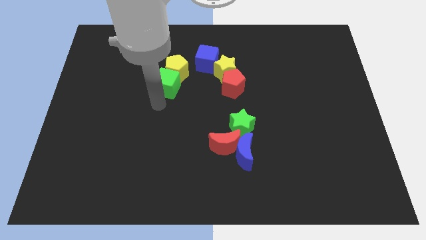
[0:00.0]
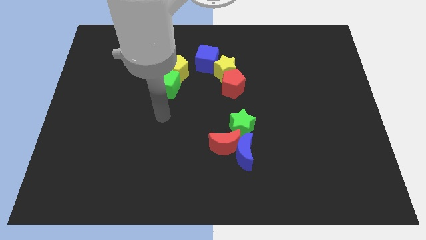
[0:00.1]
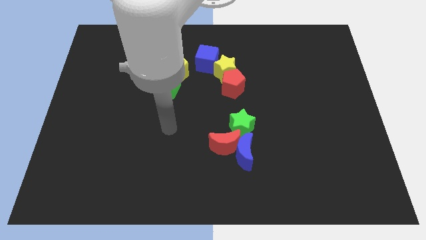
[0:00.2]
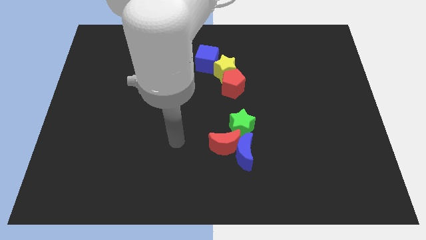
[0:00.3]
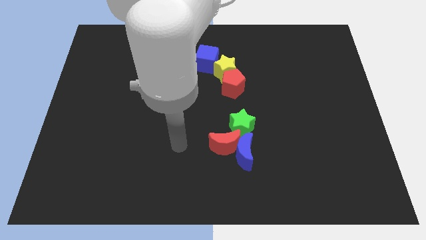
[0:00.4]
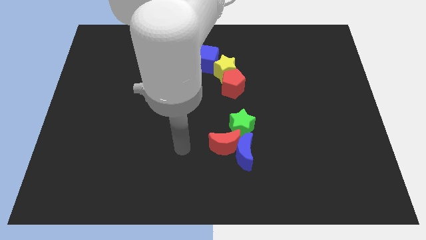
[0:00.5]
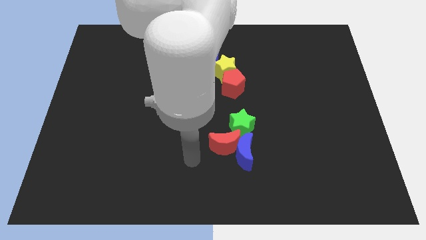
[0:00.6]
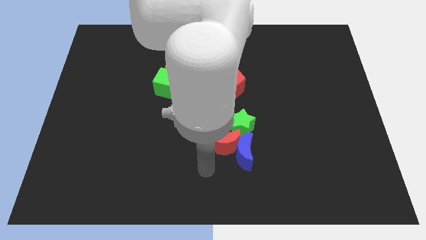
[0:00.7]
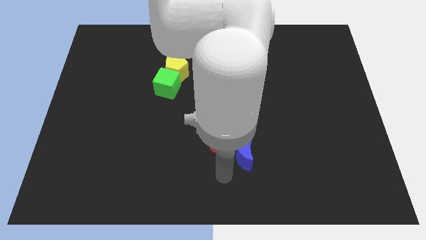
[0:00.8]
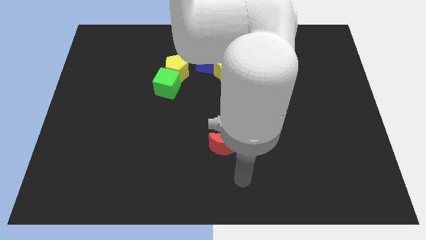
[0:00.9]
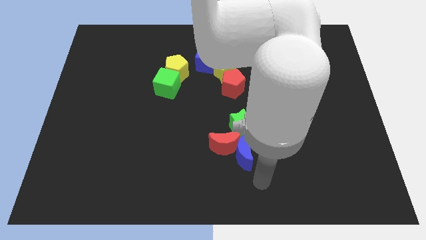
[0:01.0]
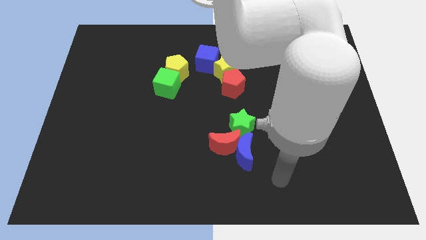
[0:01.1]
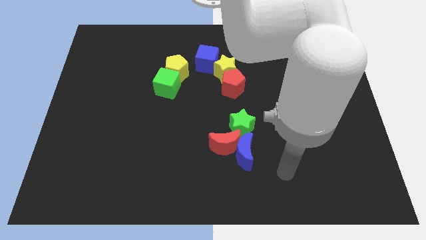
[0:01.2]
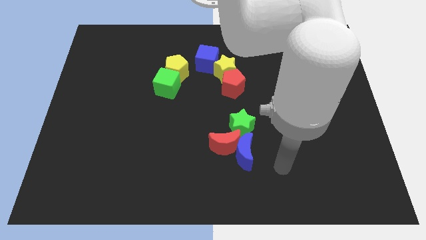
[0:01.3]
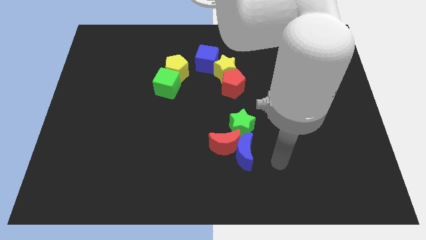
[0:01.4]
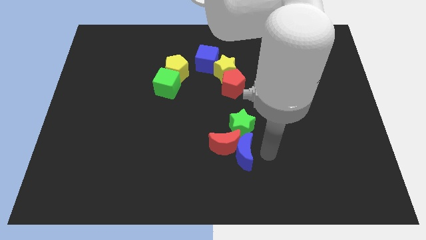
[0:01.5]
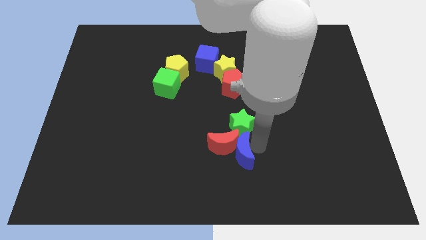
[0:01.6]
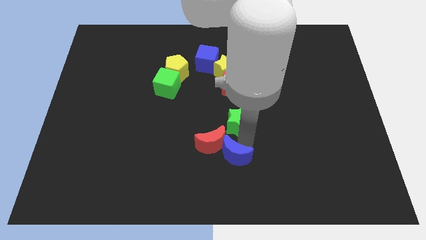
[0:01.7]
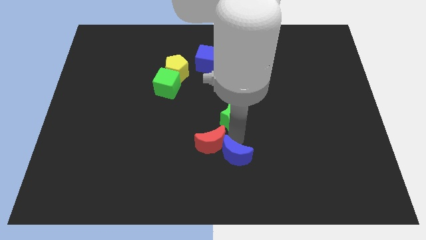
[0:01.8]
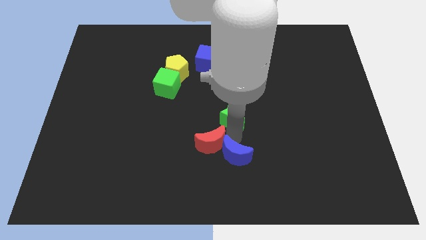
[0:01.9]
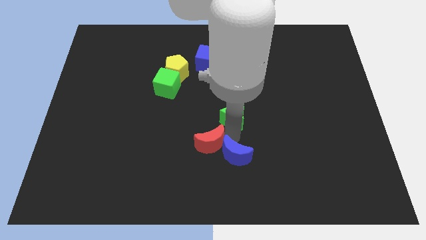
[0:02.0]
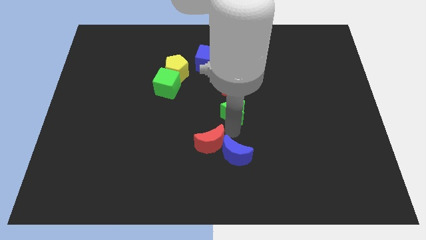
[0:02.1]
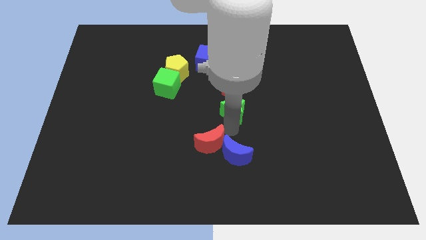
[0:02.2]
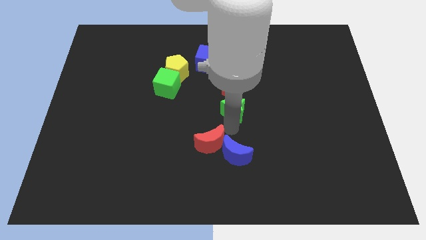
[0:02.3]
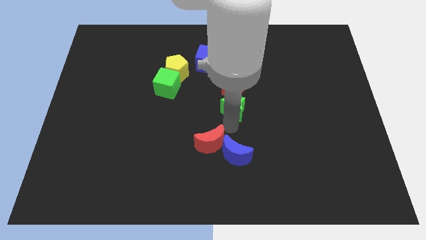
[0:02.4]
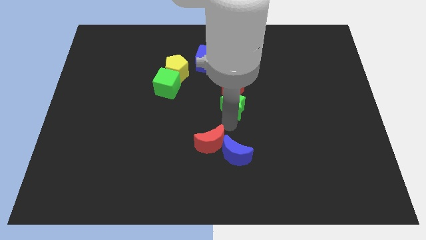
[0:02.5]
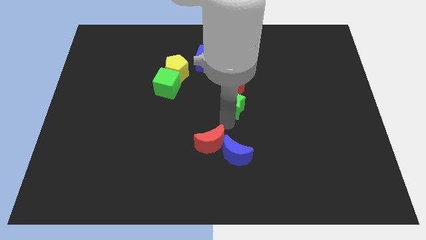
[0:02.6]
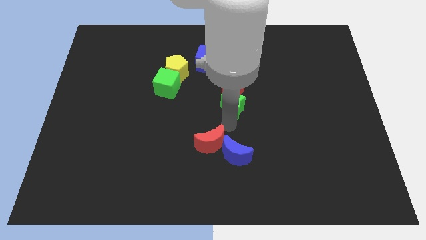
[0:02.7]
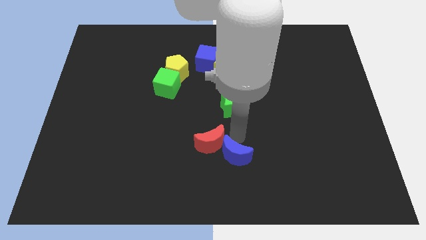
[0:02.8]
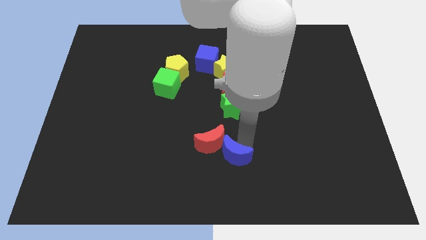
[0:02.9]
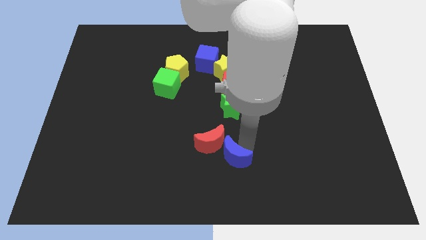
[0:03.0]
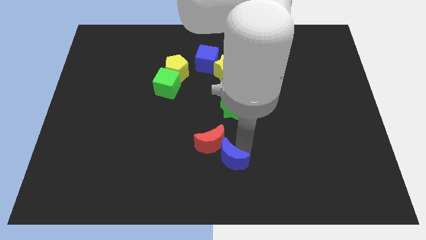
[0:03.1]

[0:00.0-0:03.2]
place the green star below the red pentagon

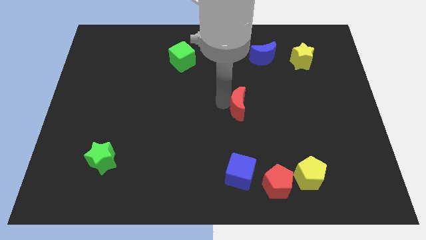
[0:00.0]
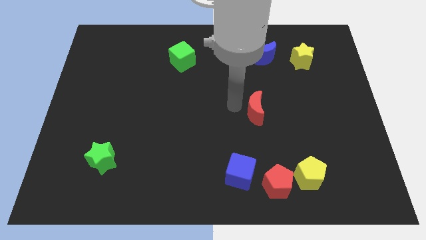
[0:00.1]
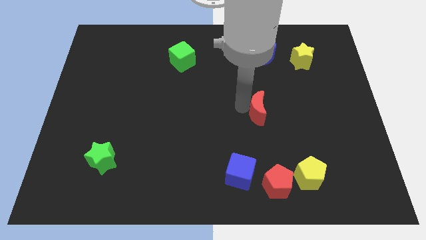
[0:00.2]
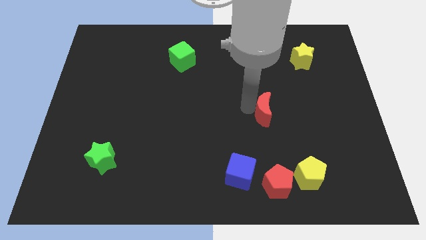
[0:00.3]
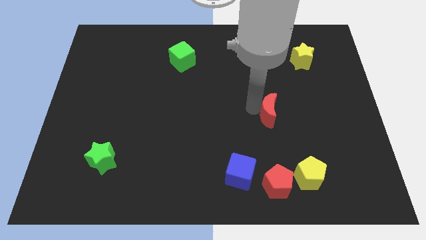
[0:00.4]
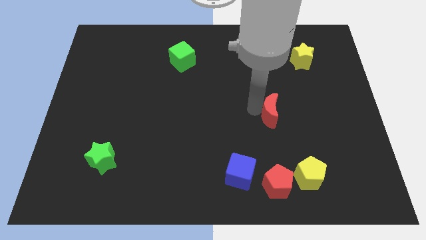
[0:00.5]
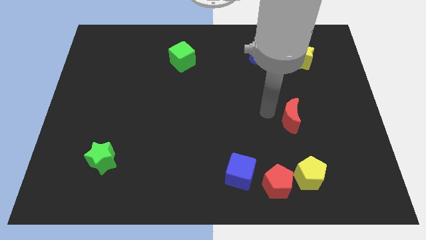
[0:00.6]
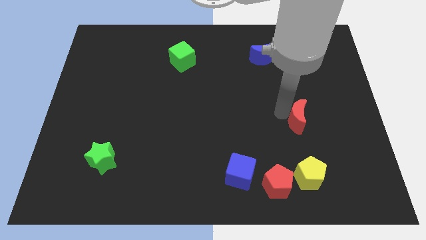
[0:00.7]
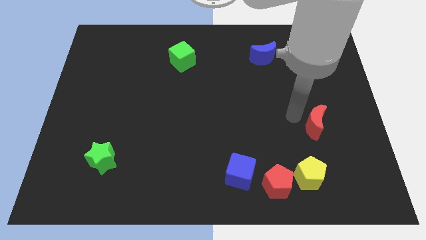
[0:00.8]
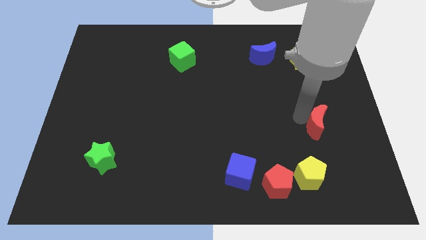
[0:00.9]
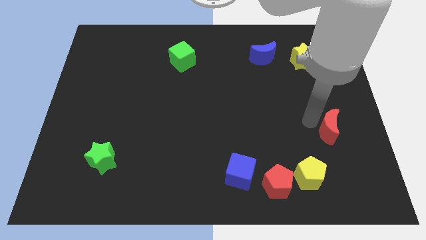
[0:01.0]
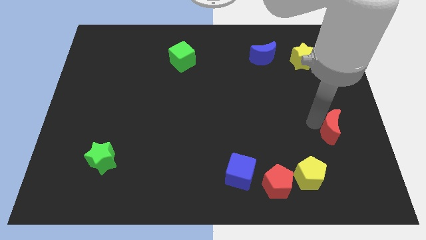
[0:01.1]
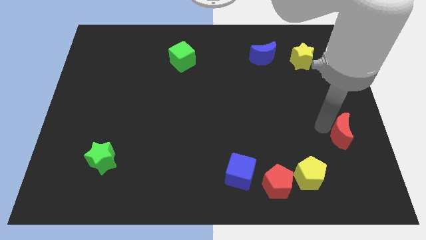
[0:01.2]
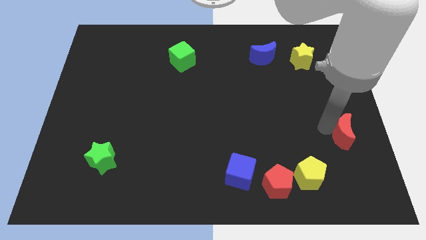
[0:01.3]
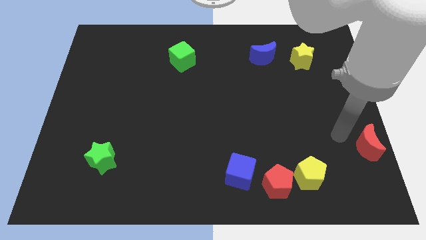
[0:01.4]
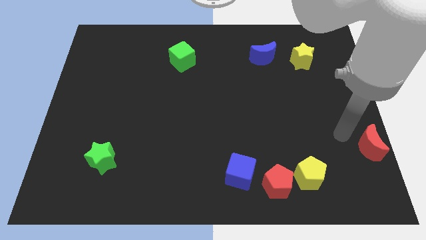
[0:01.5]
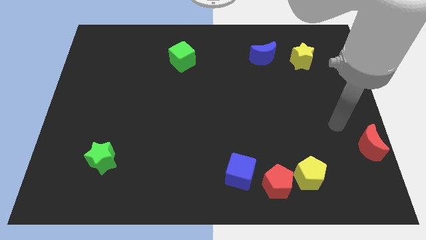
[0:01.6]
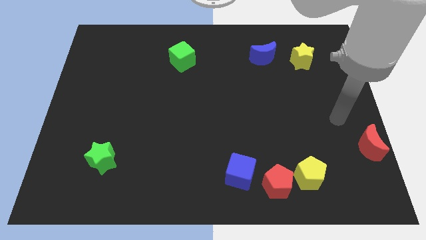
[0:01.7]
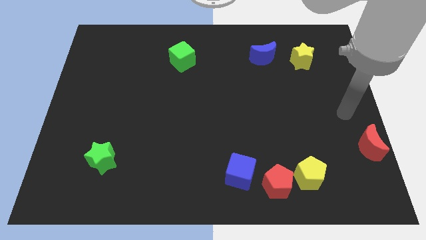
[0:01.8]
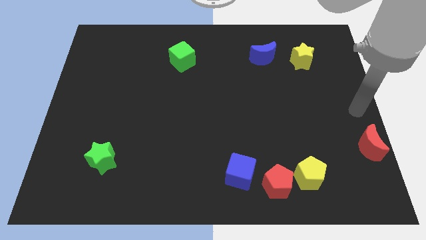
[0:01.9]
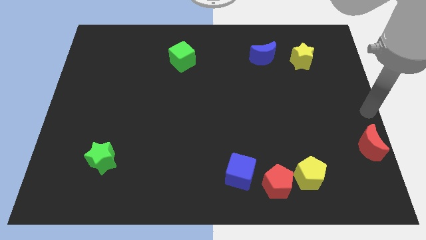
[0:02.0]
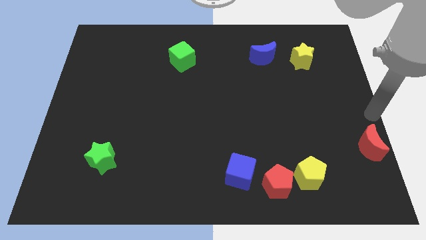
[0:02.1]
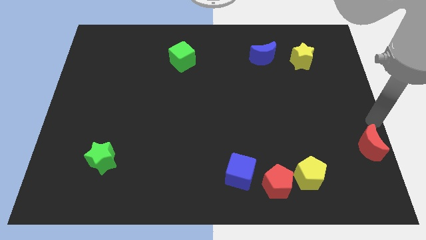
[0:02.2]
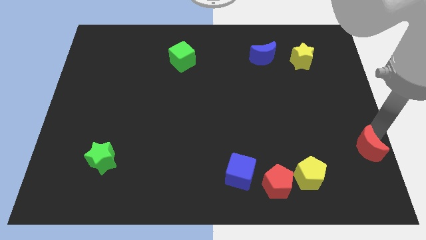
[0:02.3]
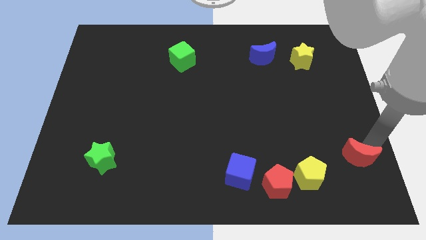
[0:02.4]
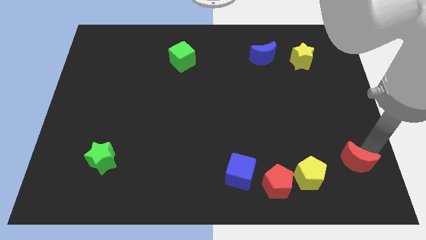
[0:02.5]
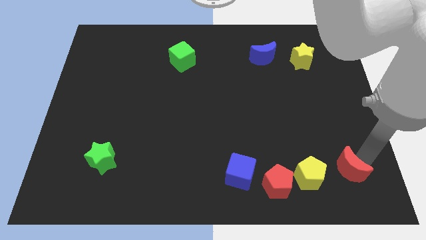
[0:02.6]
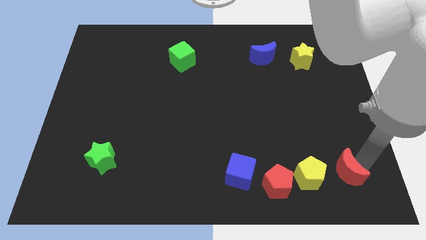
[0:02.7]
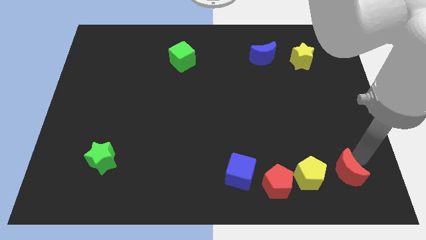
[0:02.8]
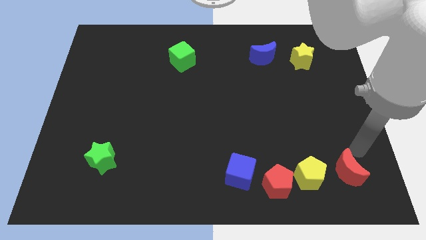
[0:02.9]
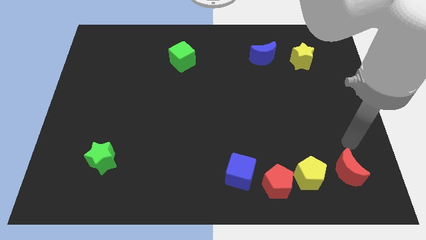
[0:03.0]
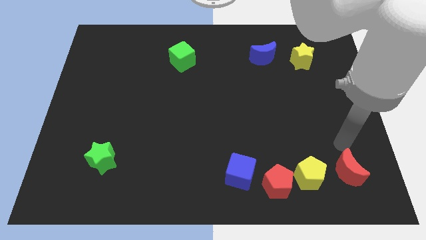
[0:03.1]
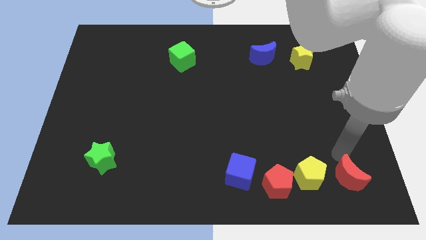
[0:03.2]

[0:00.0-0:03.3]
move the red moon at the right side of the yellow pentagon

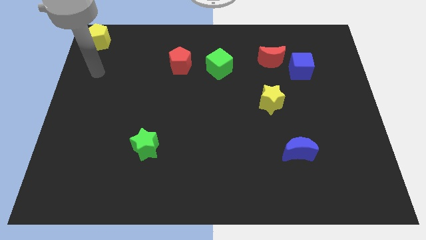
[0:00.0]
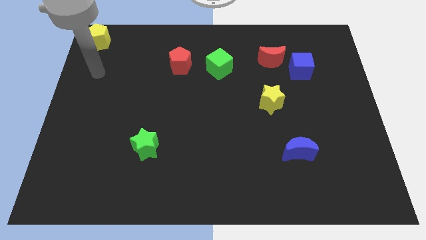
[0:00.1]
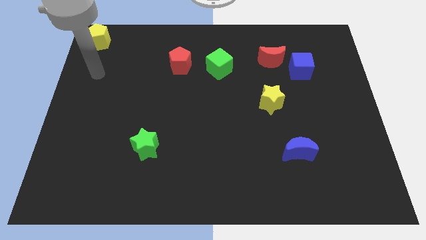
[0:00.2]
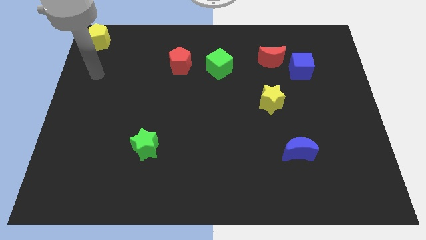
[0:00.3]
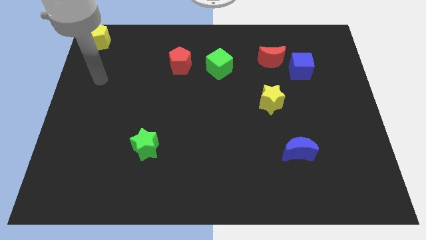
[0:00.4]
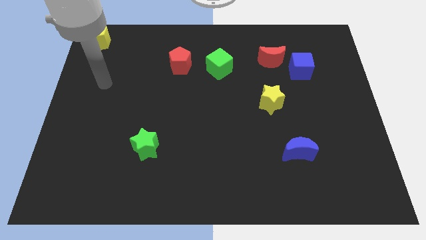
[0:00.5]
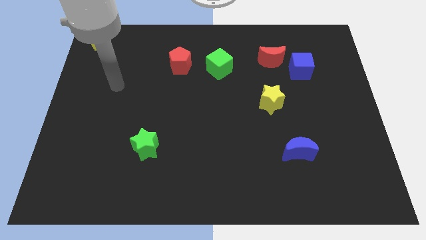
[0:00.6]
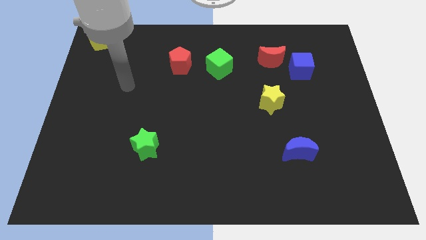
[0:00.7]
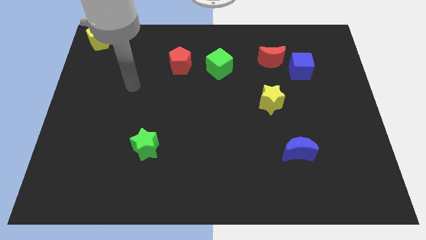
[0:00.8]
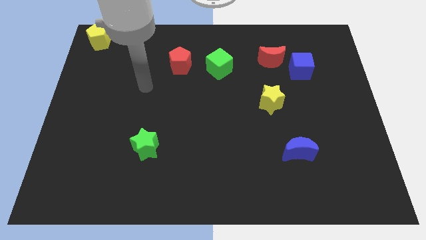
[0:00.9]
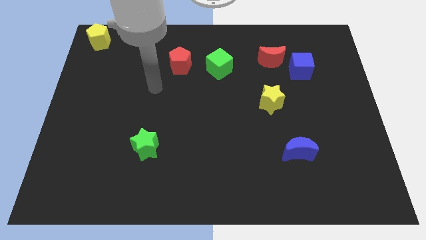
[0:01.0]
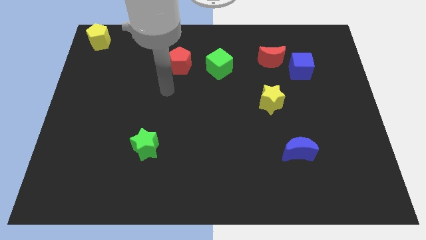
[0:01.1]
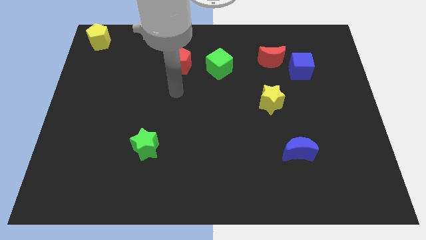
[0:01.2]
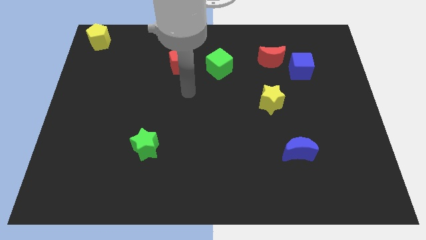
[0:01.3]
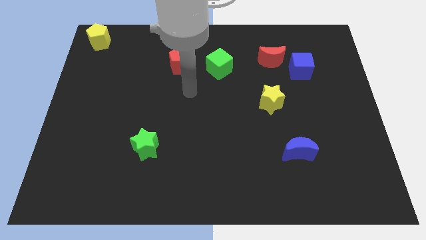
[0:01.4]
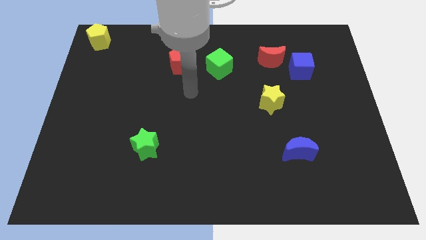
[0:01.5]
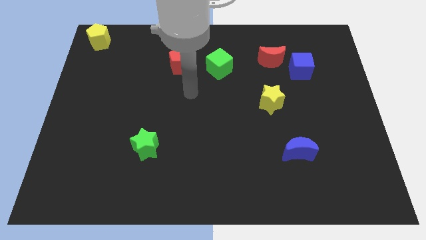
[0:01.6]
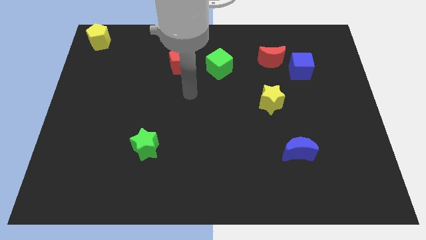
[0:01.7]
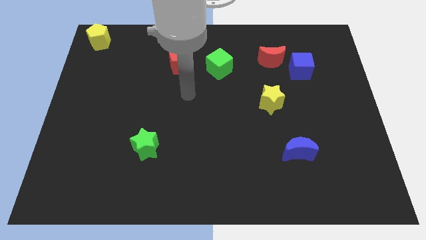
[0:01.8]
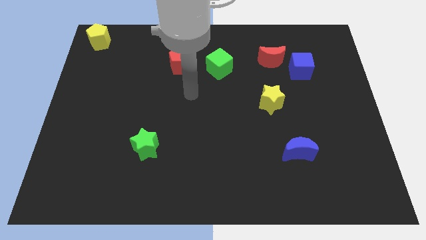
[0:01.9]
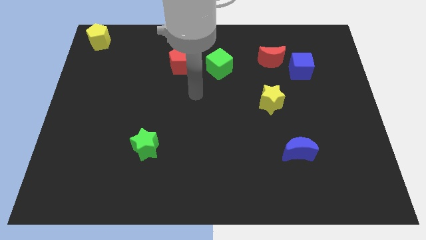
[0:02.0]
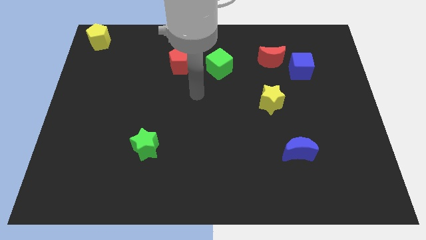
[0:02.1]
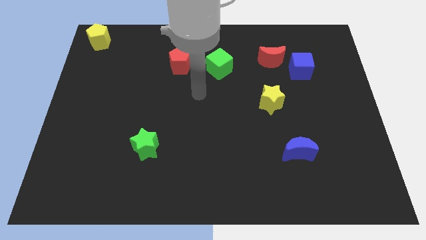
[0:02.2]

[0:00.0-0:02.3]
place your hand at center of the board

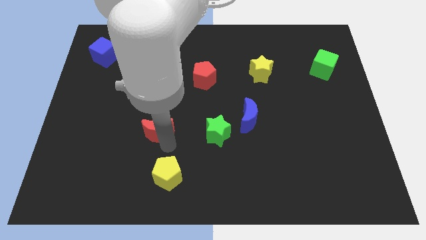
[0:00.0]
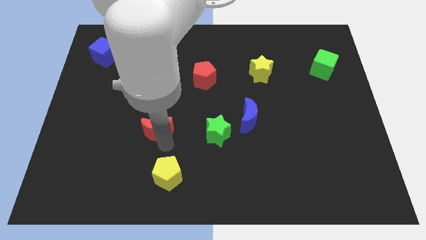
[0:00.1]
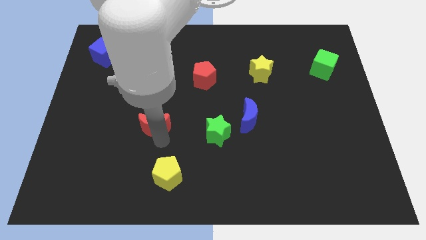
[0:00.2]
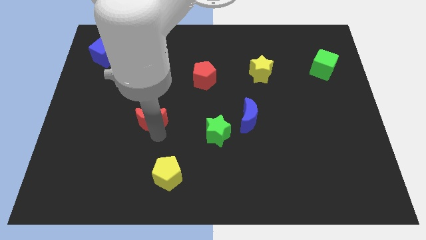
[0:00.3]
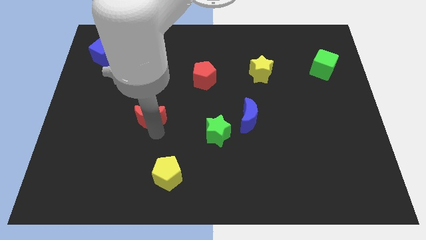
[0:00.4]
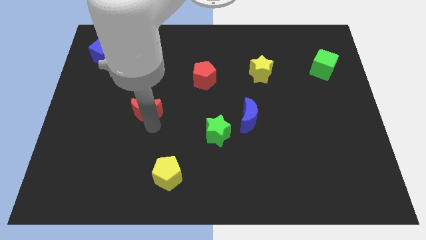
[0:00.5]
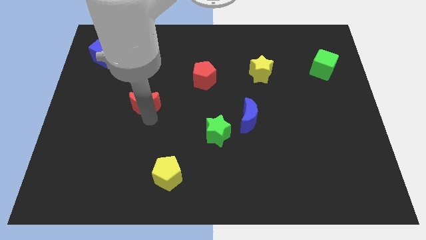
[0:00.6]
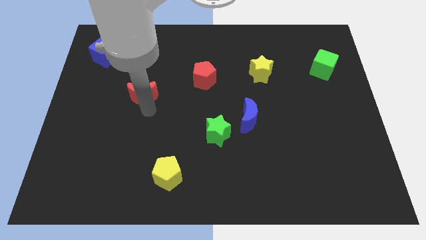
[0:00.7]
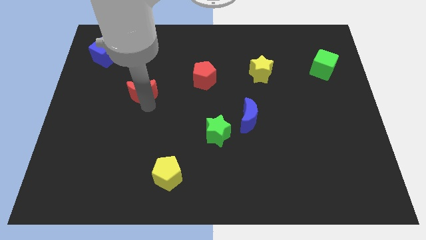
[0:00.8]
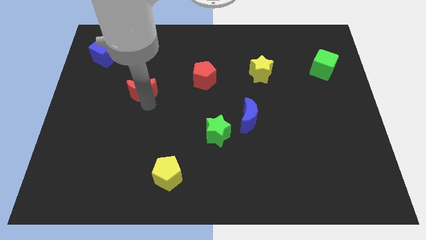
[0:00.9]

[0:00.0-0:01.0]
move the red moon to the top
